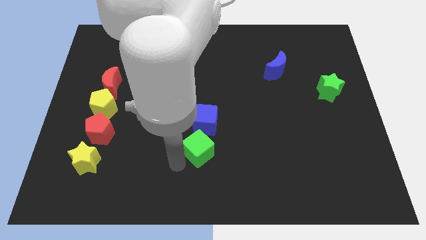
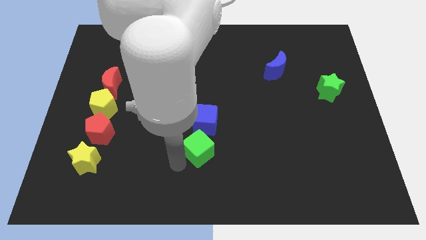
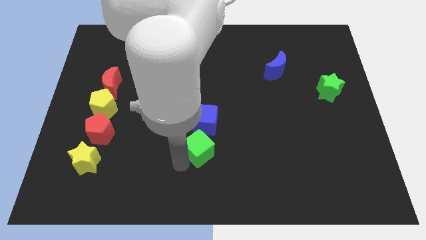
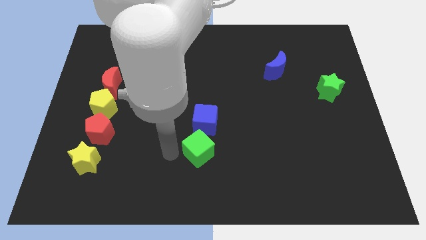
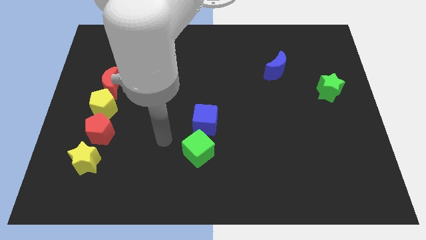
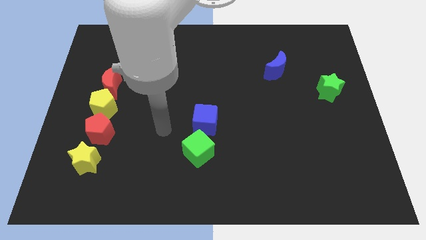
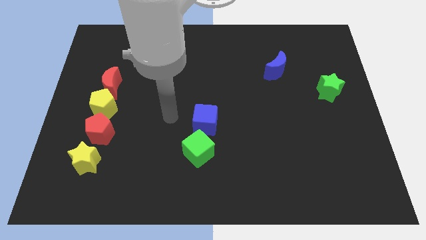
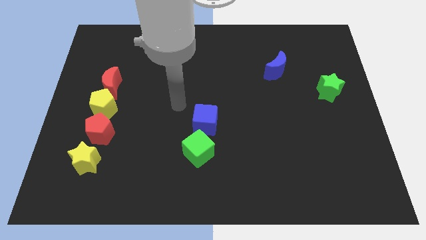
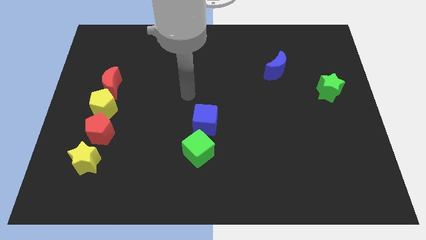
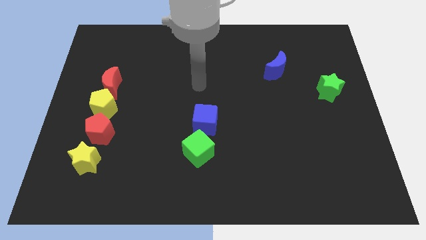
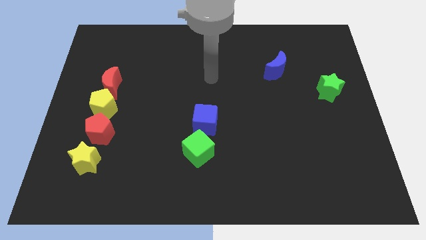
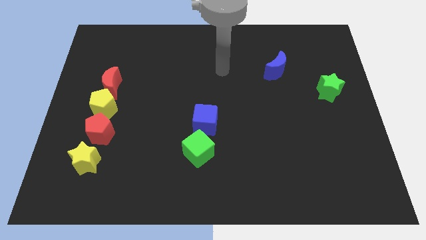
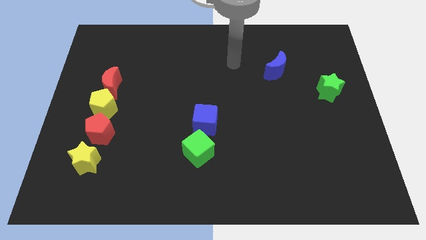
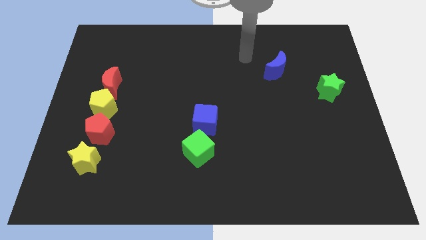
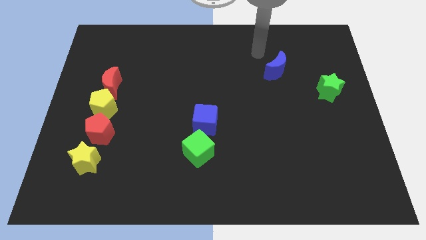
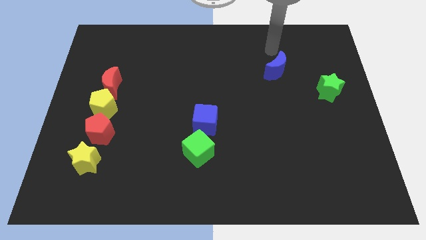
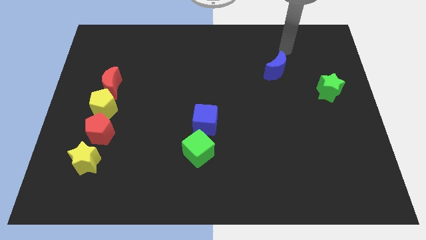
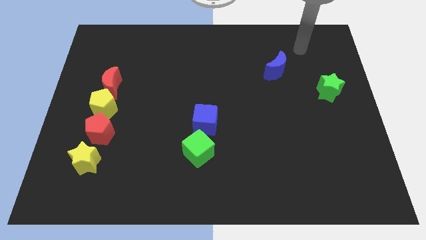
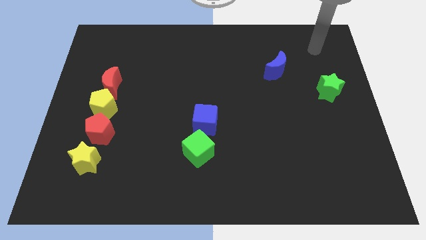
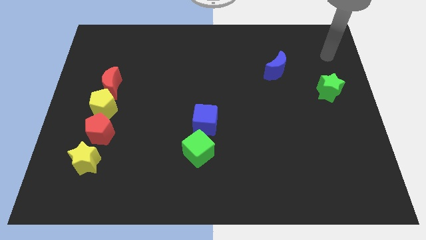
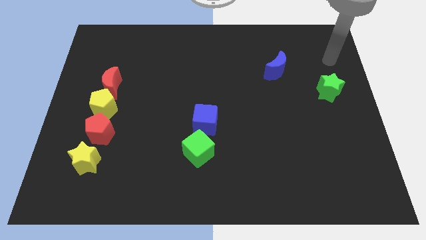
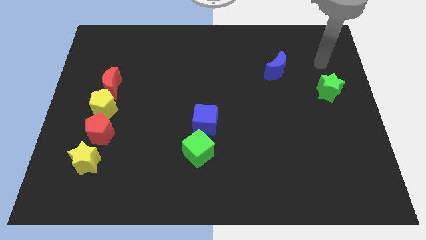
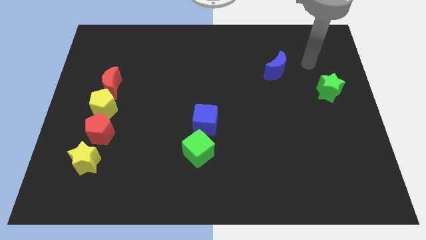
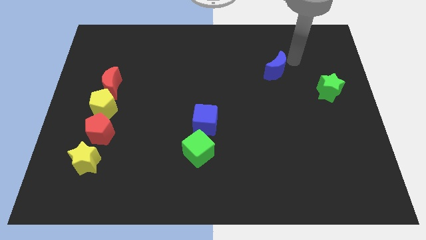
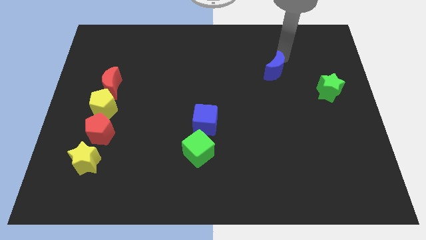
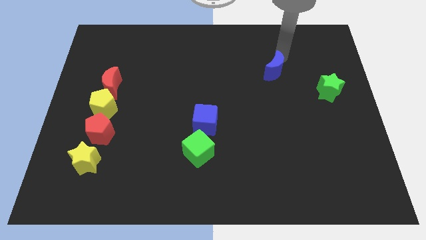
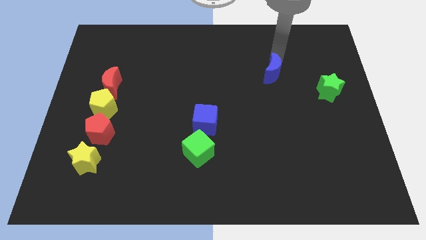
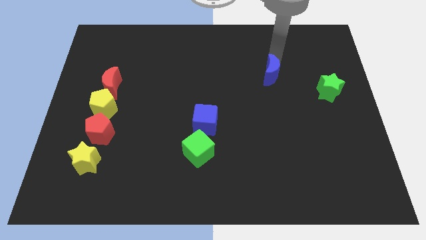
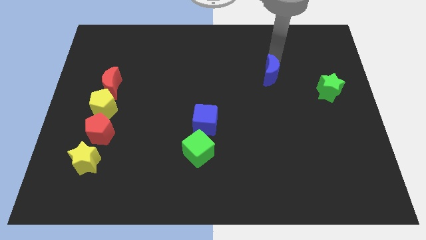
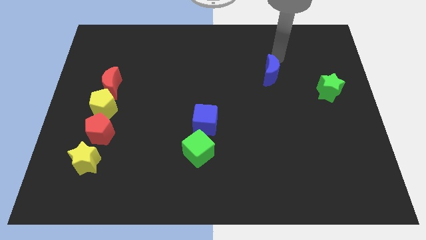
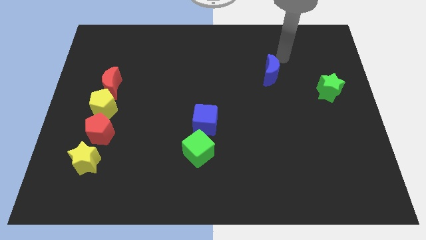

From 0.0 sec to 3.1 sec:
move your hand towards the top of the gren star

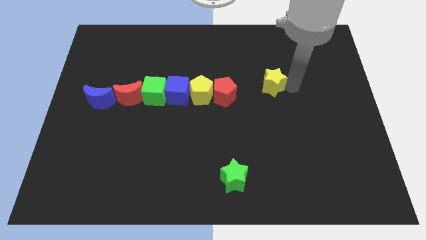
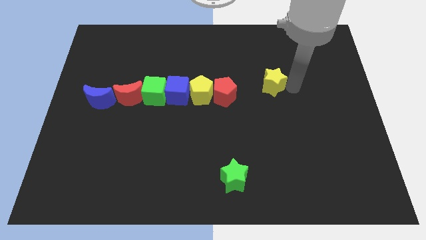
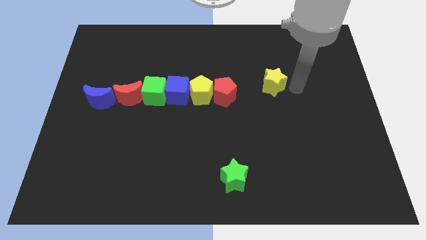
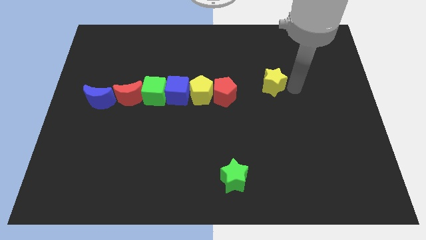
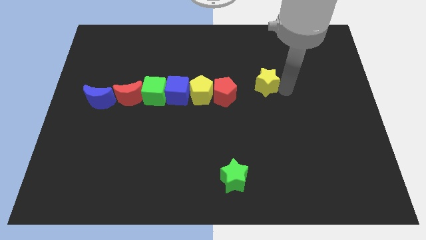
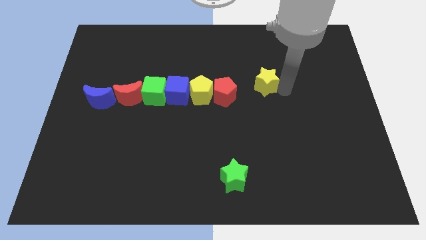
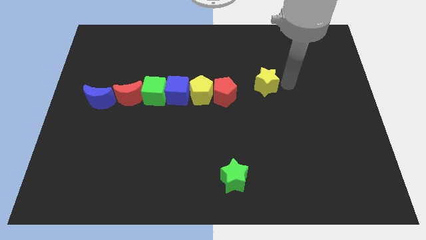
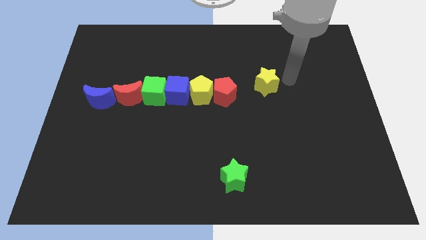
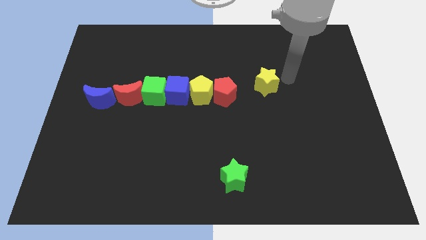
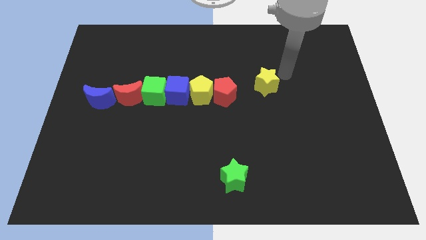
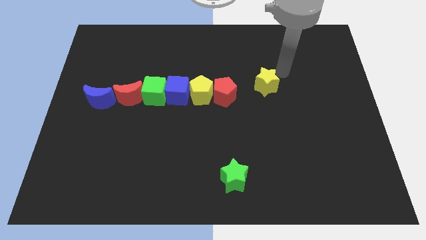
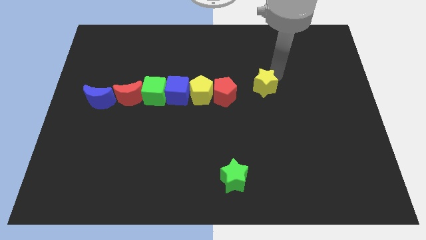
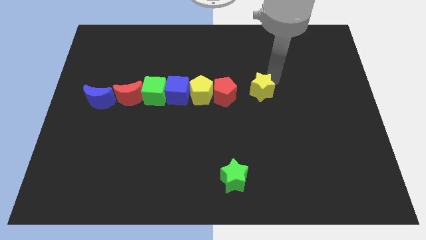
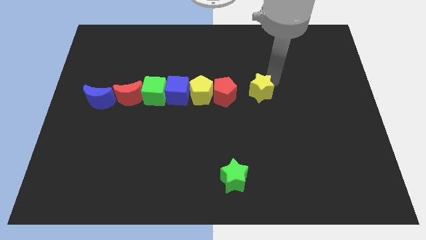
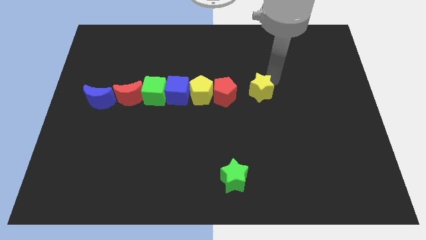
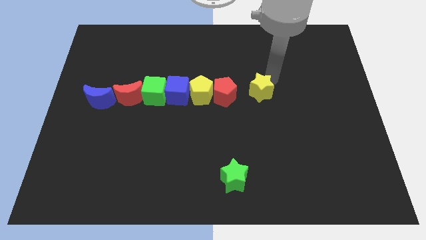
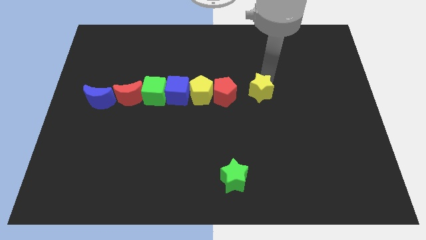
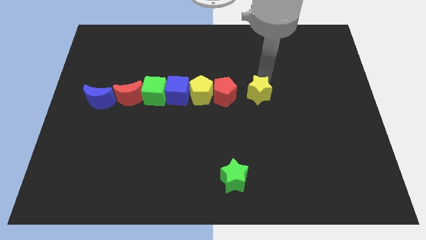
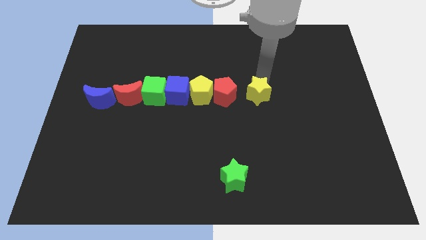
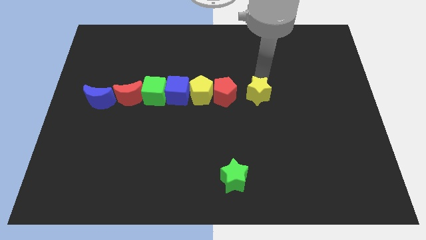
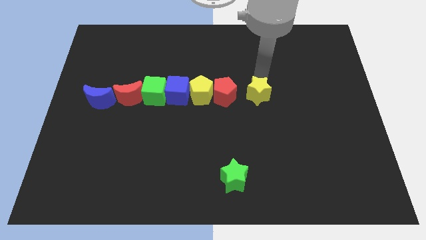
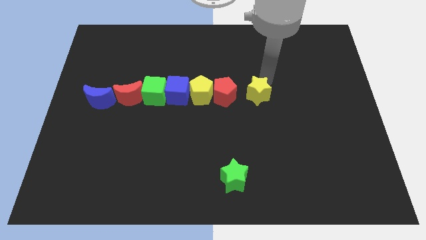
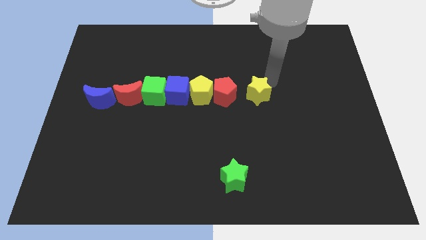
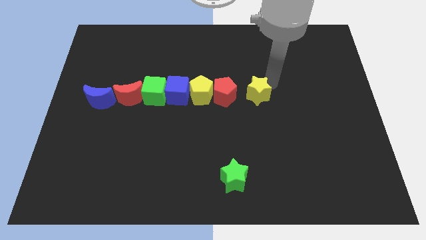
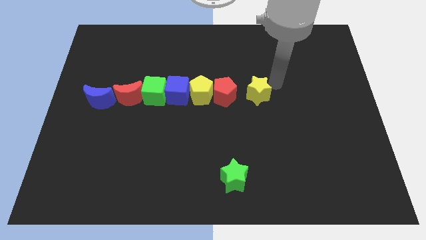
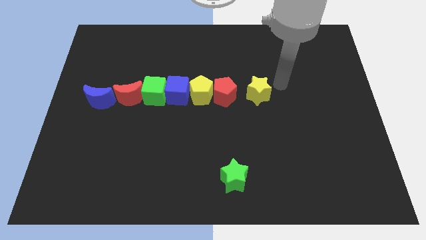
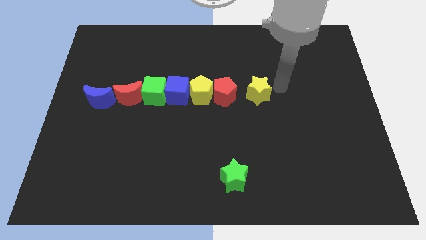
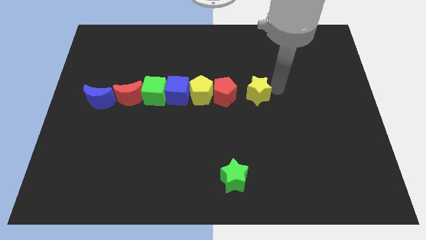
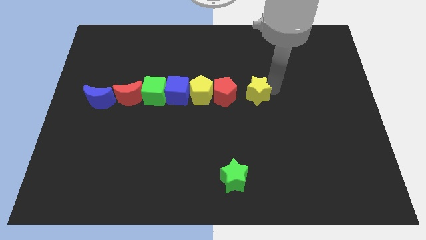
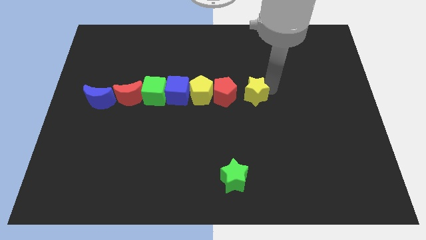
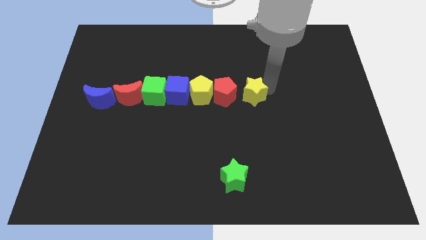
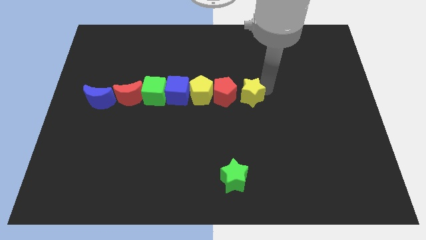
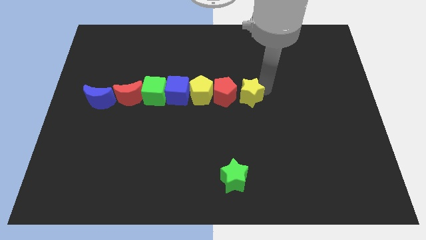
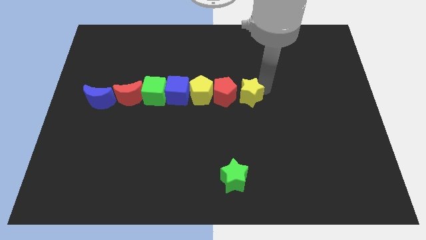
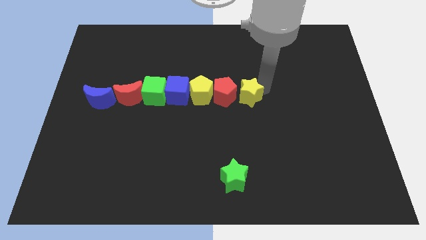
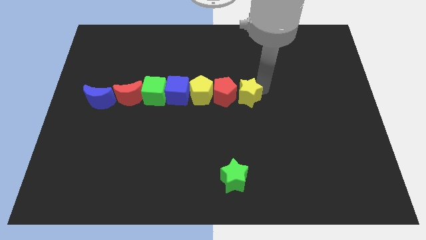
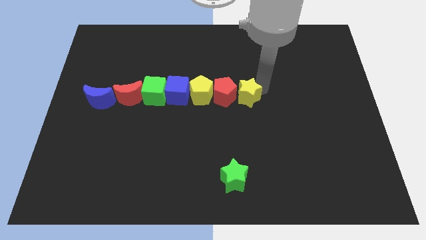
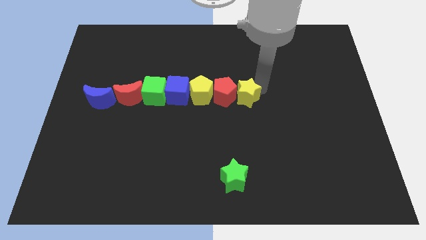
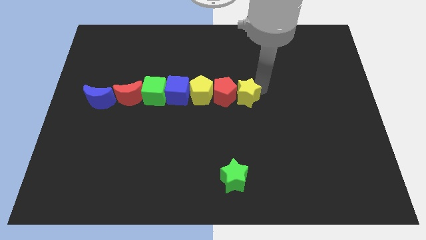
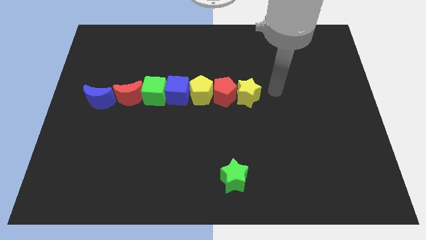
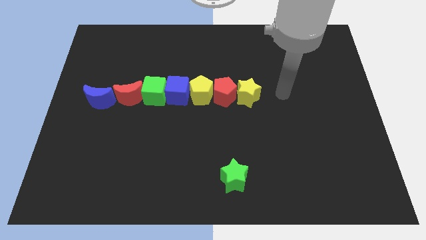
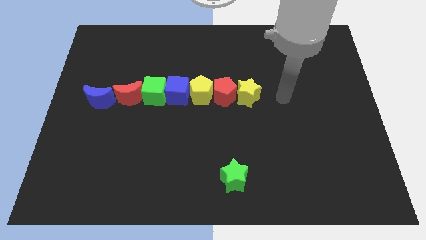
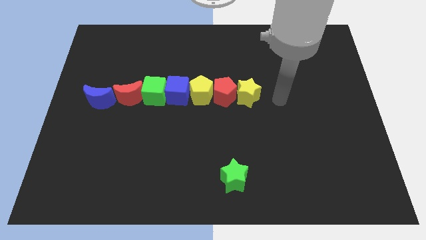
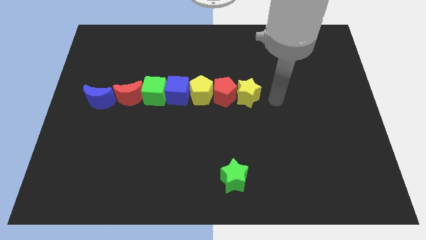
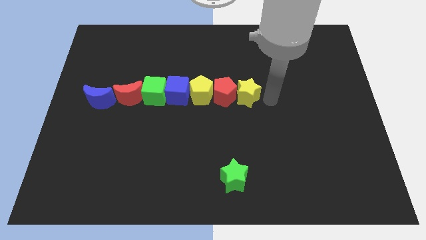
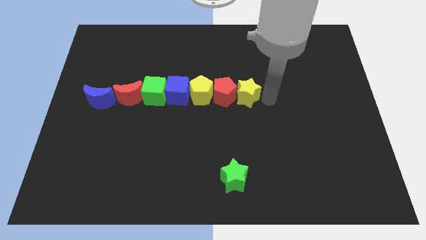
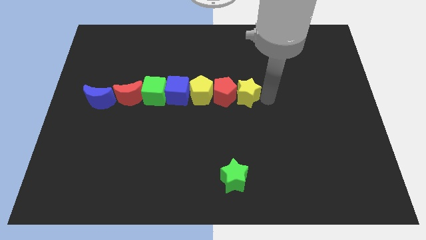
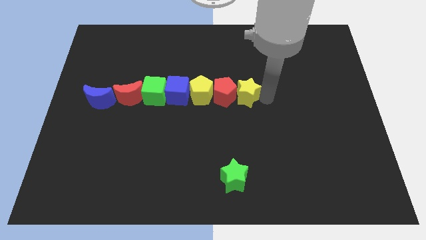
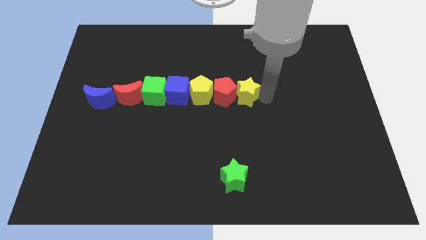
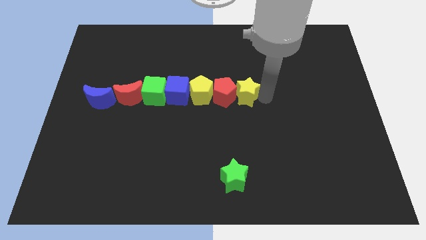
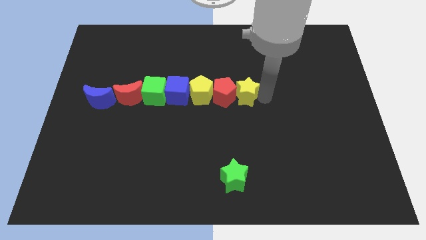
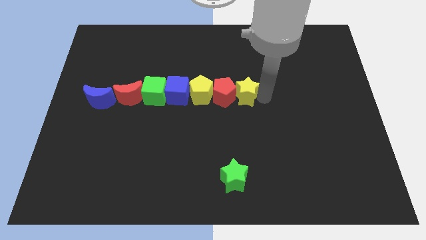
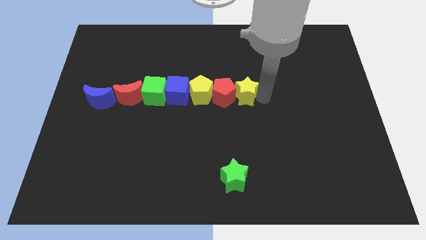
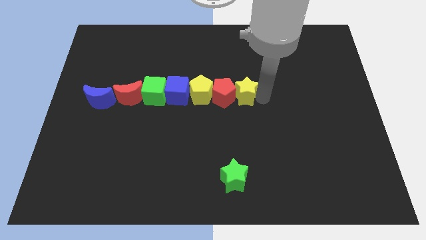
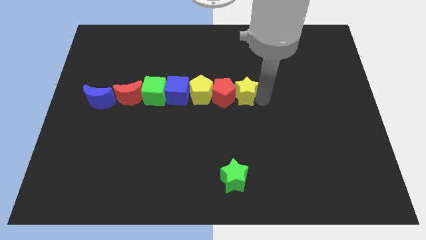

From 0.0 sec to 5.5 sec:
push the yellow star into the red pentagon

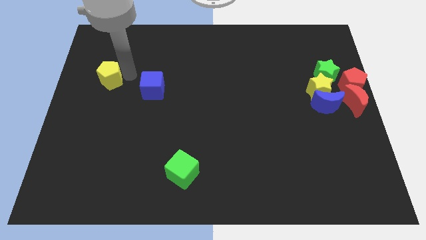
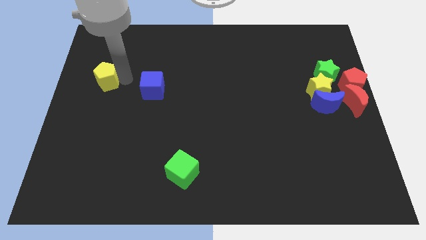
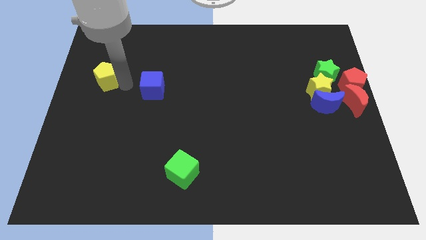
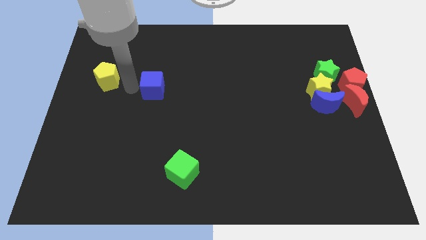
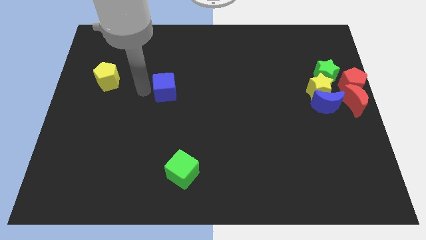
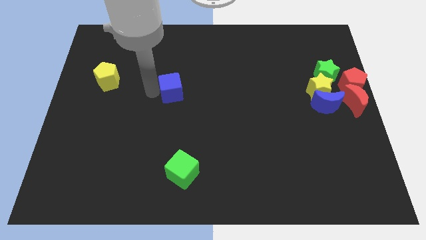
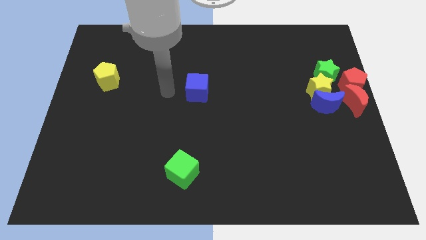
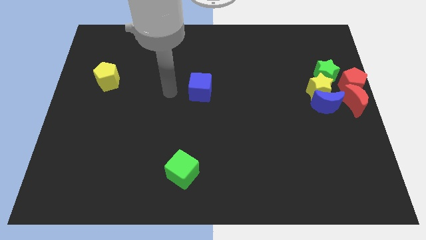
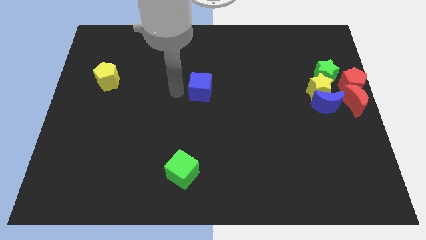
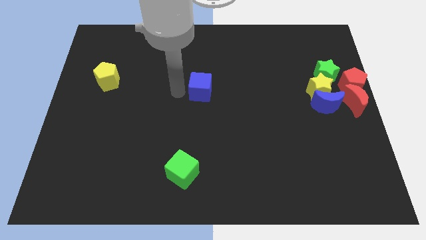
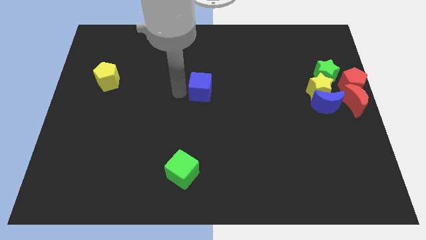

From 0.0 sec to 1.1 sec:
place blue cube at the center of the board
